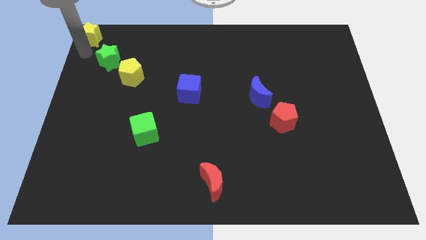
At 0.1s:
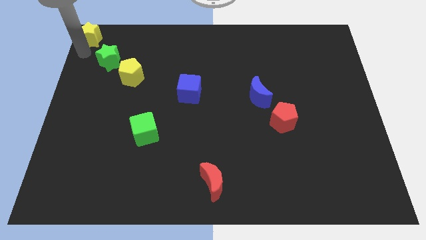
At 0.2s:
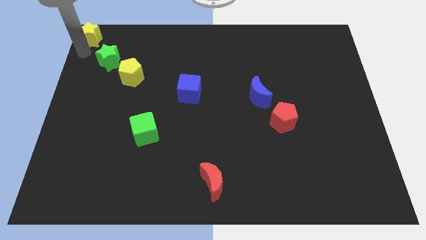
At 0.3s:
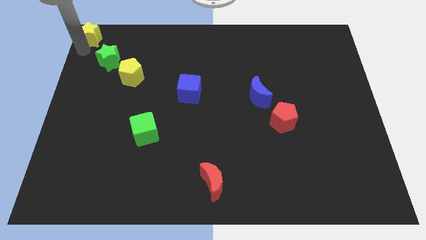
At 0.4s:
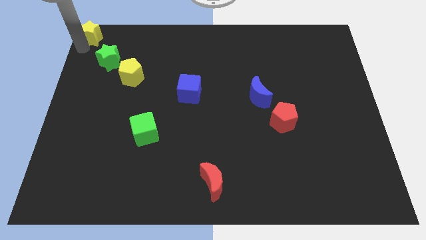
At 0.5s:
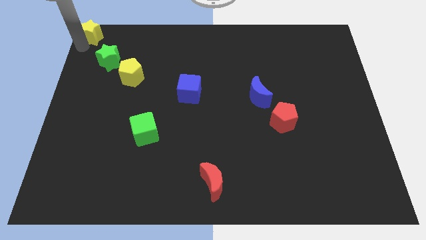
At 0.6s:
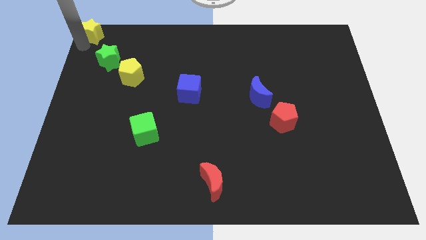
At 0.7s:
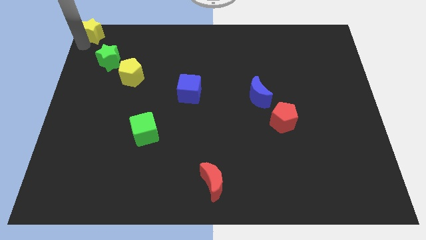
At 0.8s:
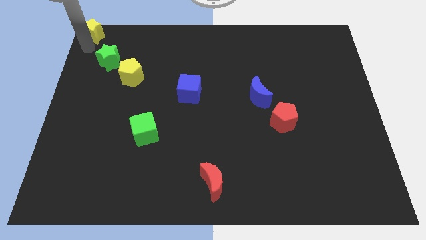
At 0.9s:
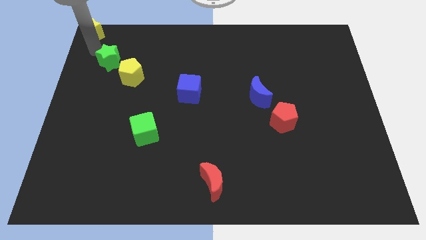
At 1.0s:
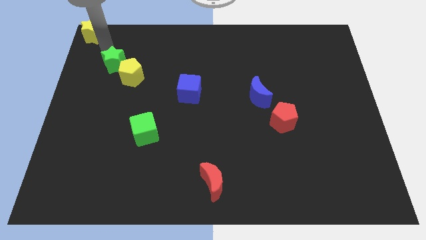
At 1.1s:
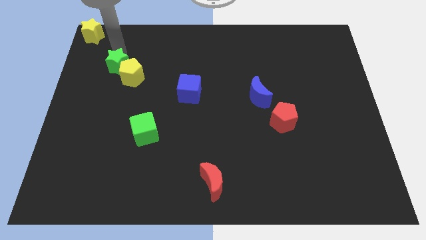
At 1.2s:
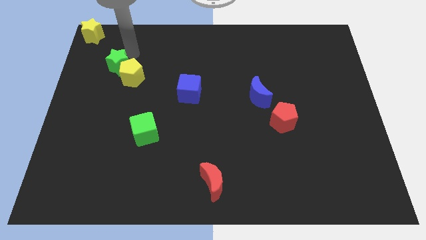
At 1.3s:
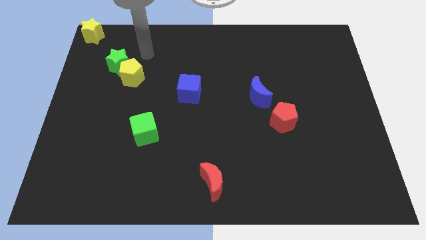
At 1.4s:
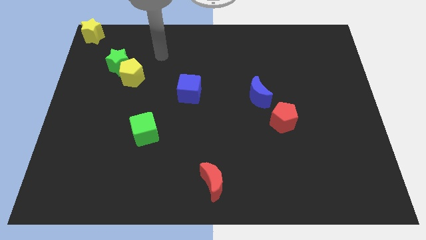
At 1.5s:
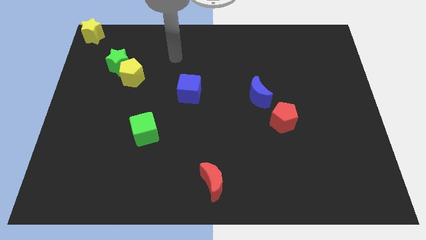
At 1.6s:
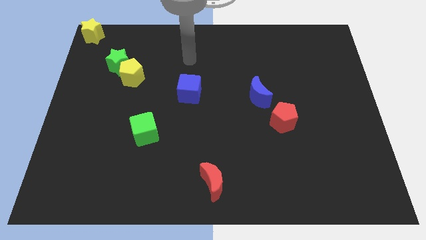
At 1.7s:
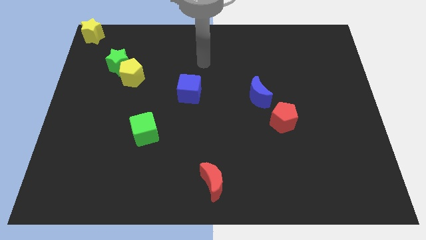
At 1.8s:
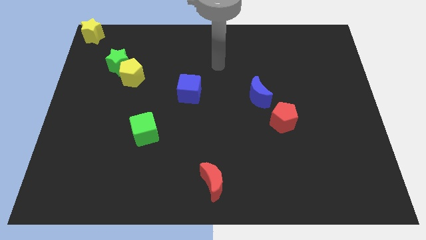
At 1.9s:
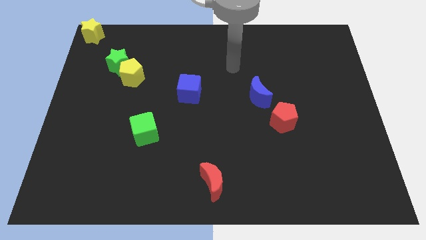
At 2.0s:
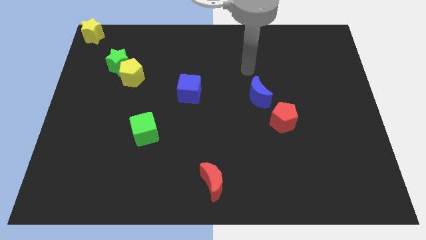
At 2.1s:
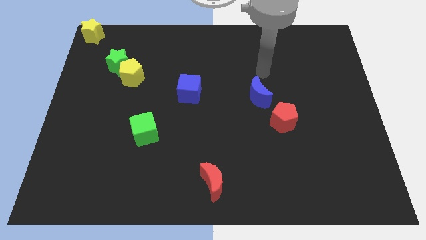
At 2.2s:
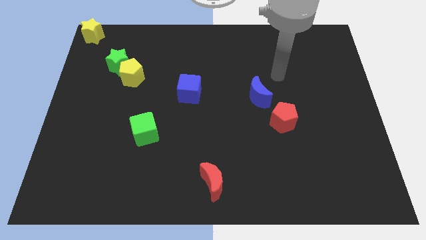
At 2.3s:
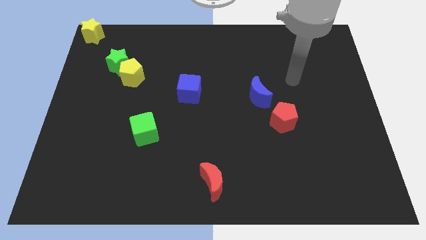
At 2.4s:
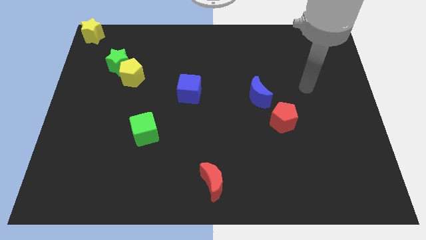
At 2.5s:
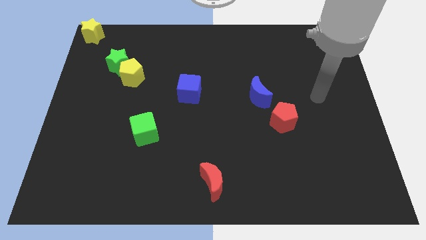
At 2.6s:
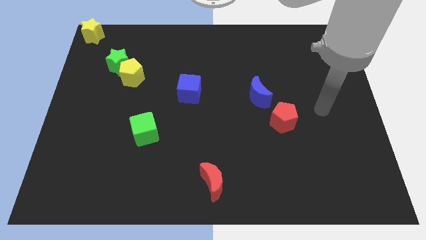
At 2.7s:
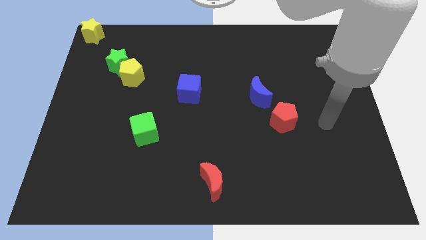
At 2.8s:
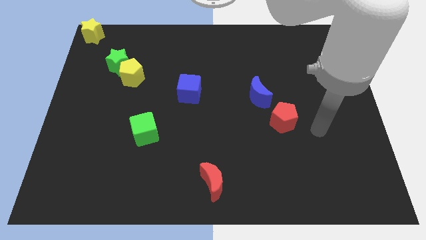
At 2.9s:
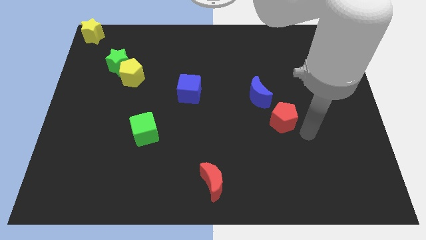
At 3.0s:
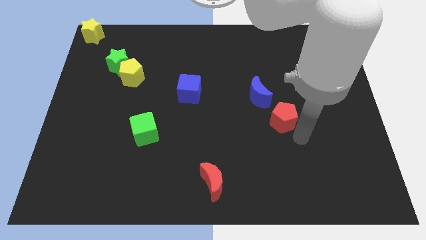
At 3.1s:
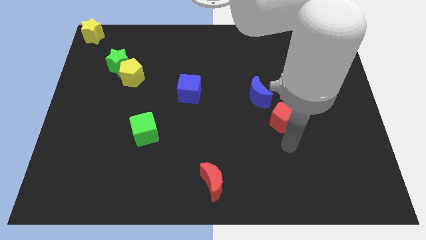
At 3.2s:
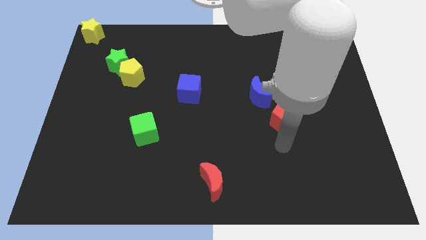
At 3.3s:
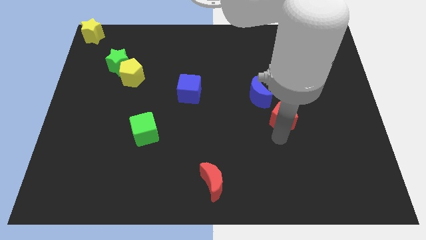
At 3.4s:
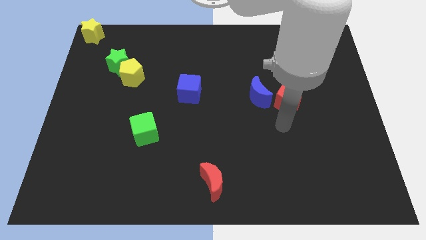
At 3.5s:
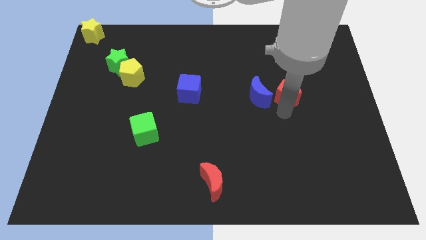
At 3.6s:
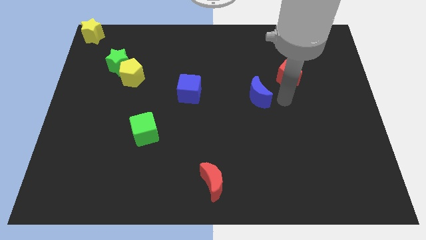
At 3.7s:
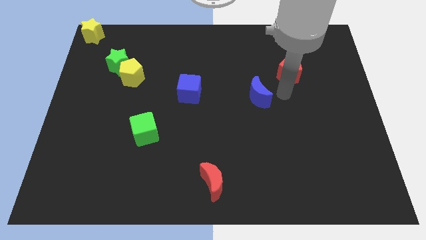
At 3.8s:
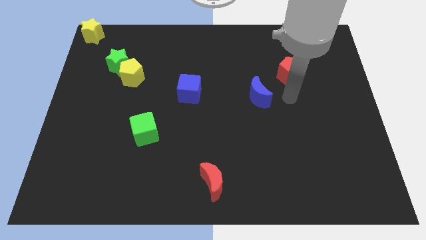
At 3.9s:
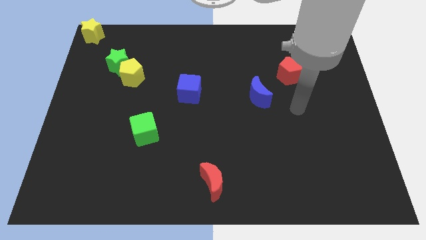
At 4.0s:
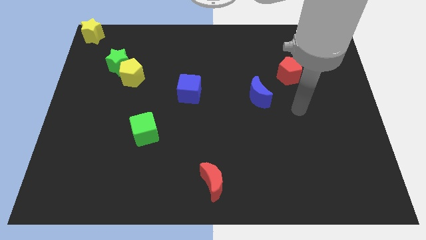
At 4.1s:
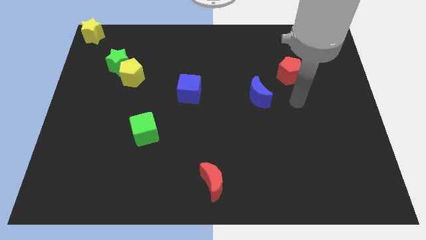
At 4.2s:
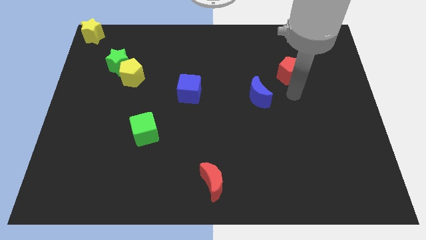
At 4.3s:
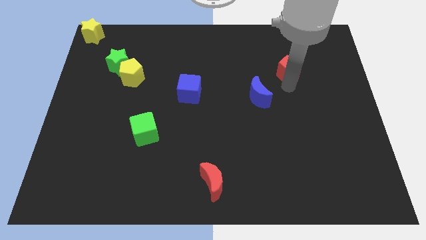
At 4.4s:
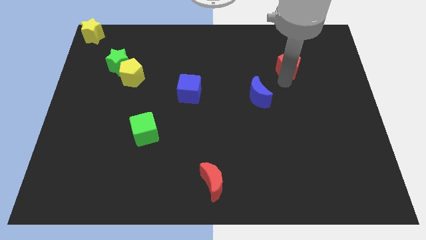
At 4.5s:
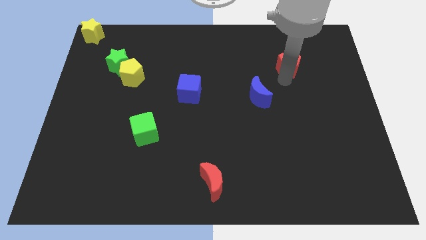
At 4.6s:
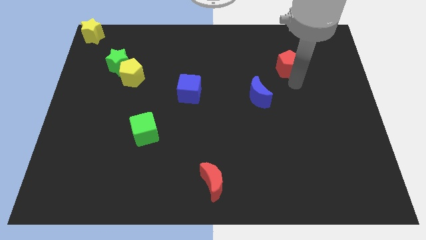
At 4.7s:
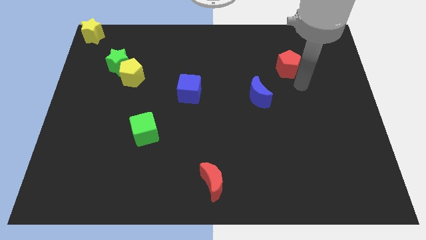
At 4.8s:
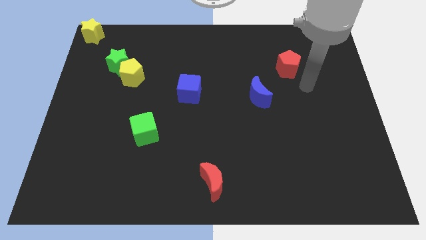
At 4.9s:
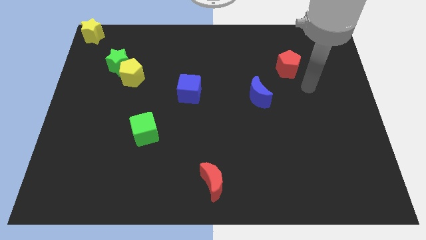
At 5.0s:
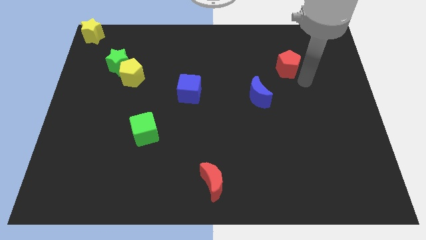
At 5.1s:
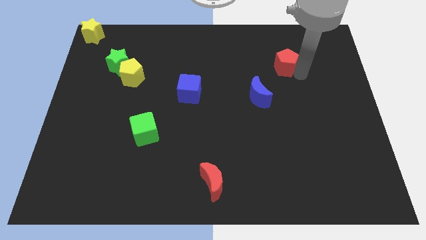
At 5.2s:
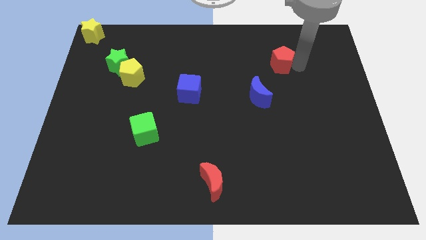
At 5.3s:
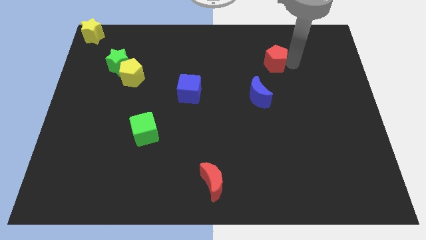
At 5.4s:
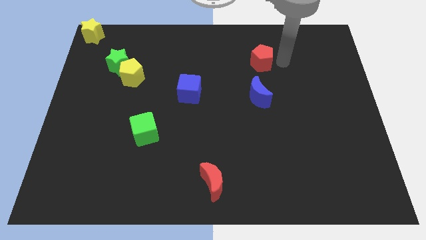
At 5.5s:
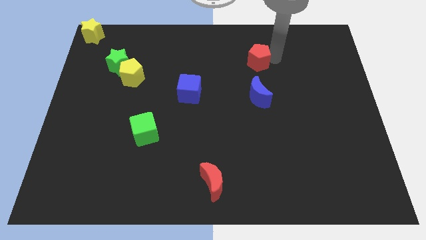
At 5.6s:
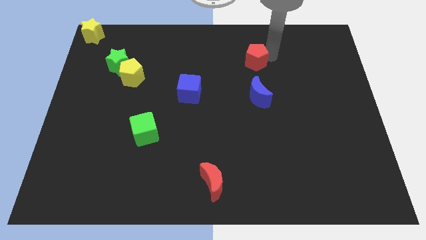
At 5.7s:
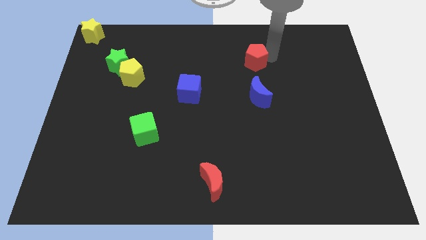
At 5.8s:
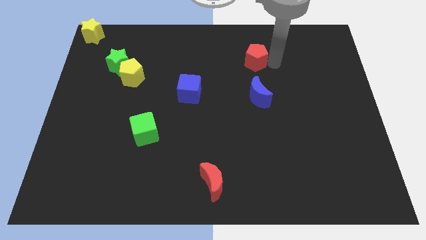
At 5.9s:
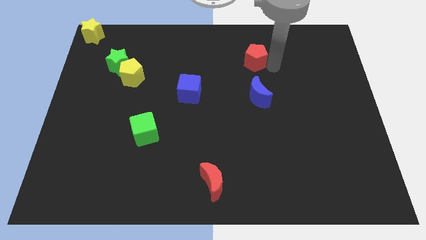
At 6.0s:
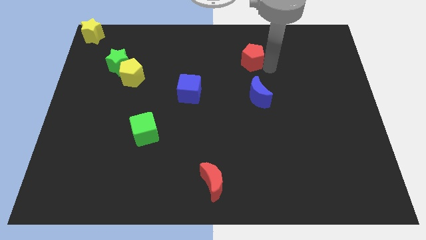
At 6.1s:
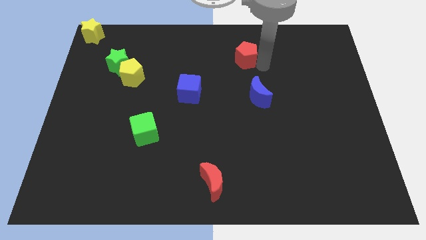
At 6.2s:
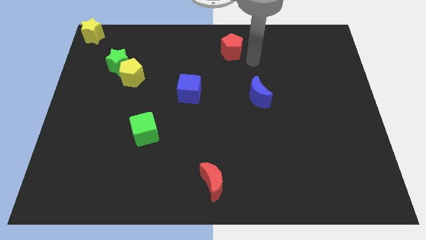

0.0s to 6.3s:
put the red pentagon at the top center of the board

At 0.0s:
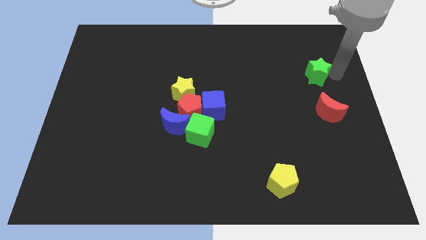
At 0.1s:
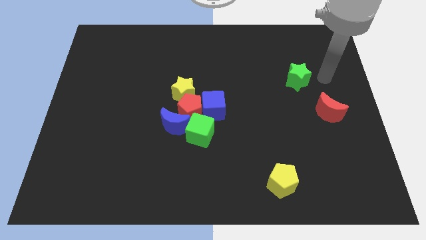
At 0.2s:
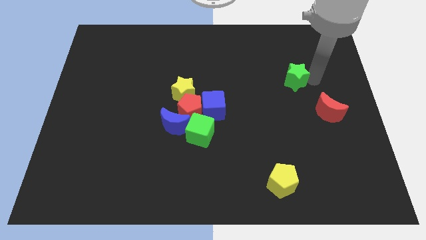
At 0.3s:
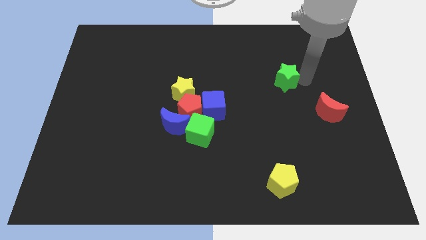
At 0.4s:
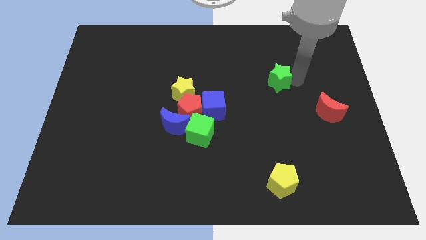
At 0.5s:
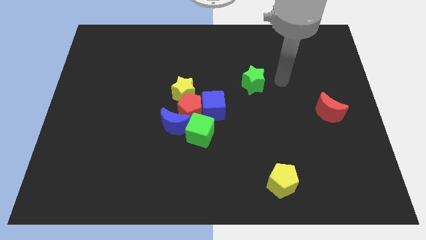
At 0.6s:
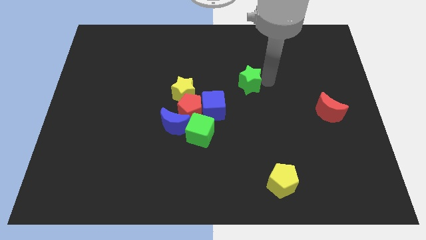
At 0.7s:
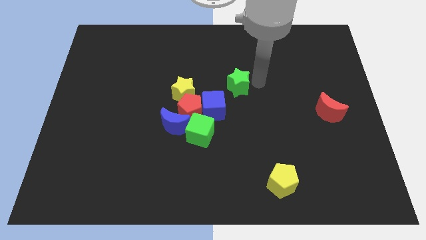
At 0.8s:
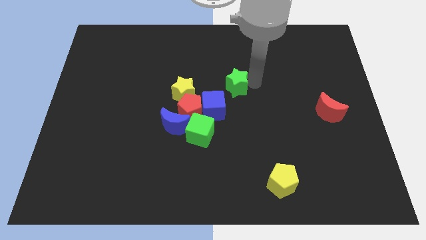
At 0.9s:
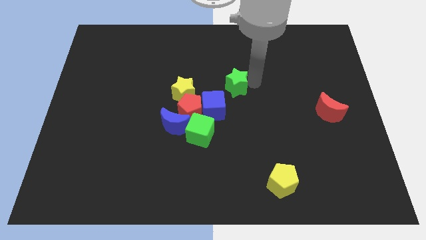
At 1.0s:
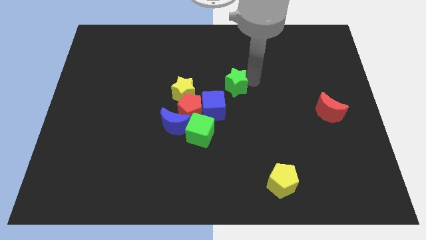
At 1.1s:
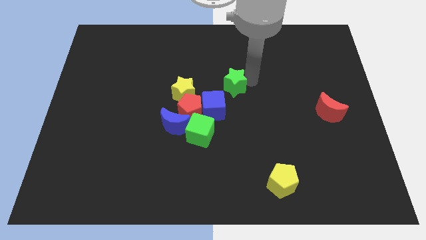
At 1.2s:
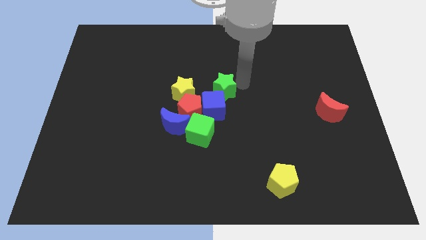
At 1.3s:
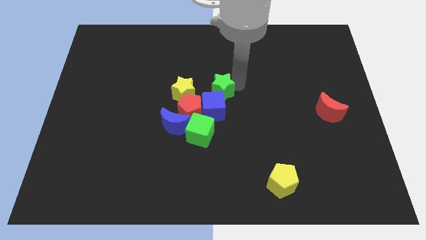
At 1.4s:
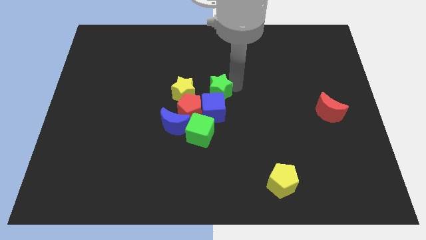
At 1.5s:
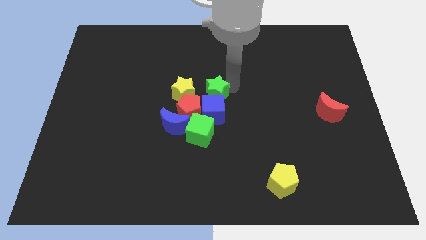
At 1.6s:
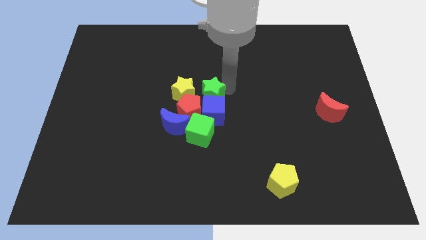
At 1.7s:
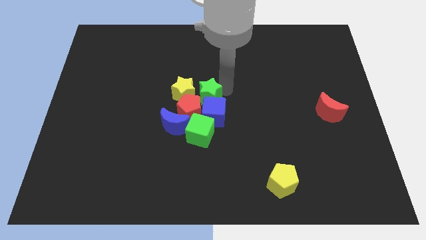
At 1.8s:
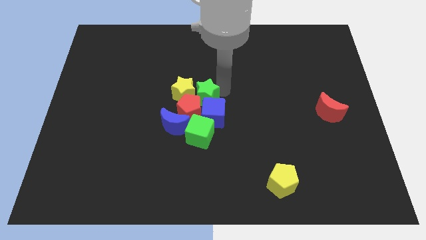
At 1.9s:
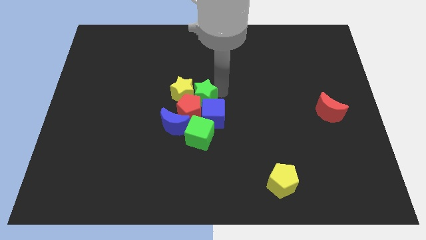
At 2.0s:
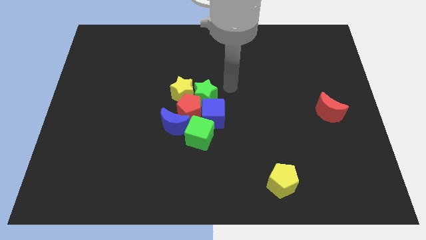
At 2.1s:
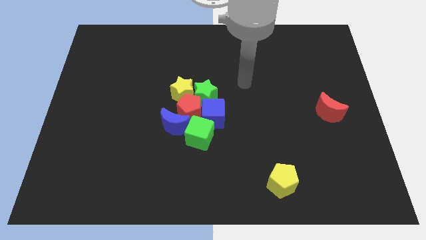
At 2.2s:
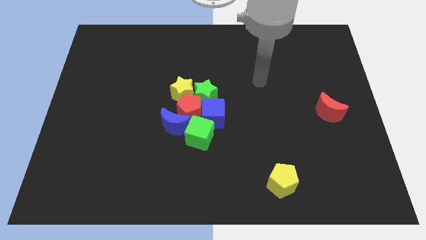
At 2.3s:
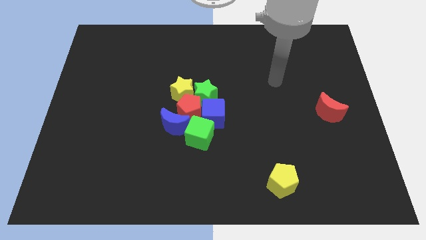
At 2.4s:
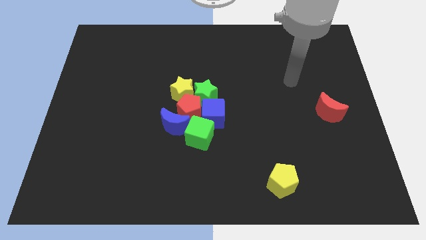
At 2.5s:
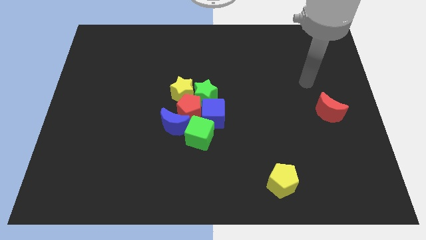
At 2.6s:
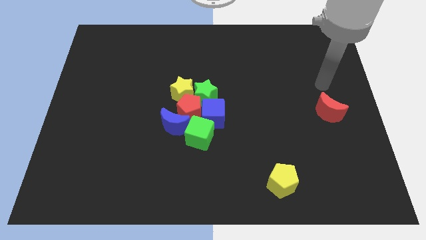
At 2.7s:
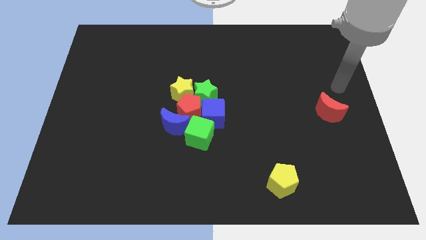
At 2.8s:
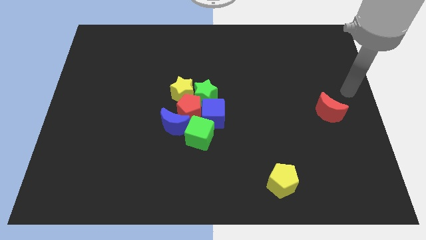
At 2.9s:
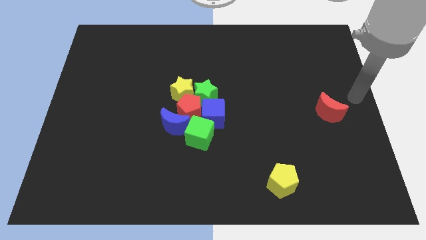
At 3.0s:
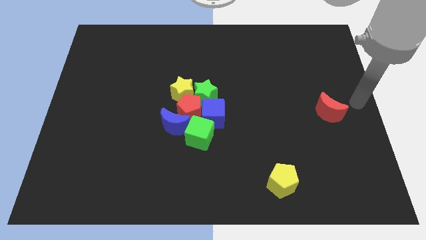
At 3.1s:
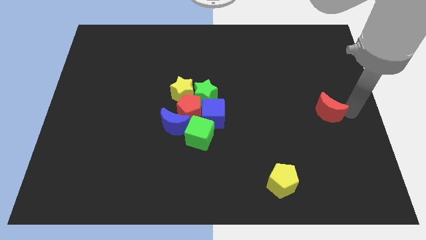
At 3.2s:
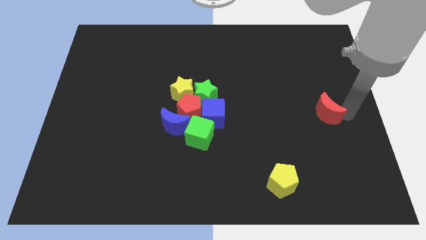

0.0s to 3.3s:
push the green star into the blue cube
